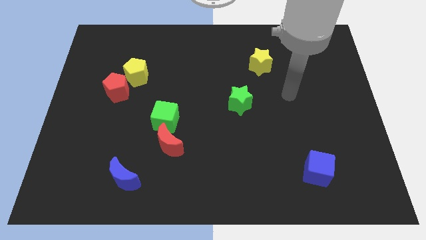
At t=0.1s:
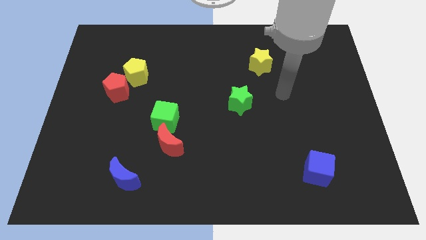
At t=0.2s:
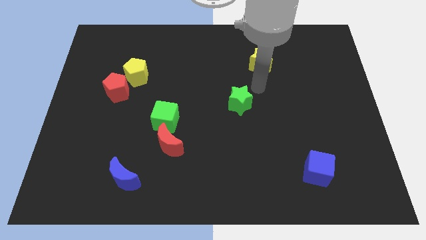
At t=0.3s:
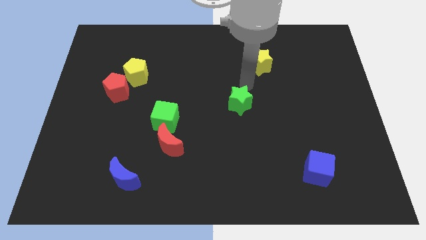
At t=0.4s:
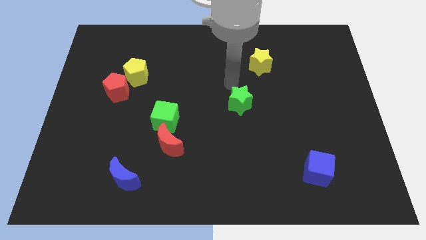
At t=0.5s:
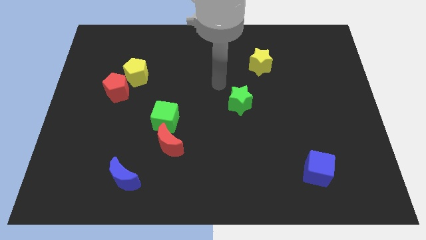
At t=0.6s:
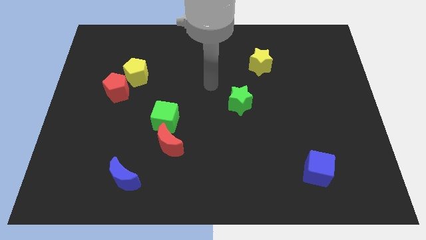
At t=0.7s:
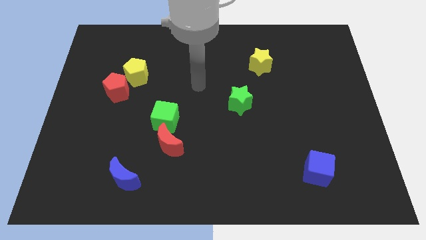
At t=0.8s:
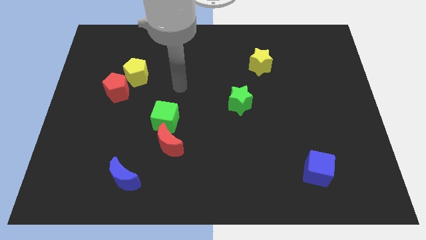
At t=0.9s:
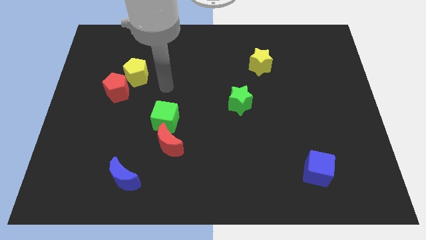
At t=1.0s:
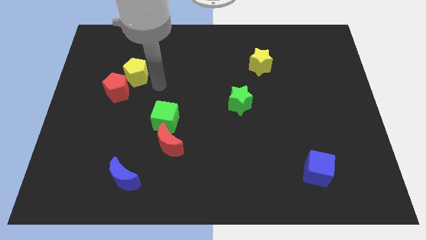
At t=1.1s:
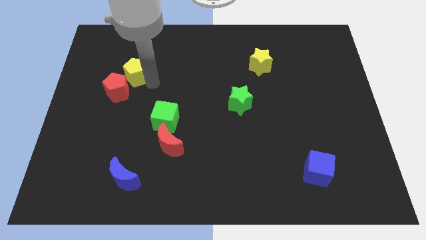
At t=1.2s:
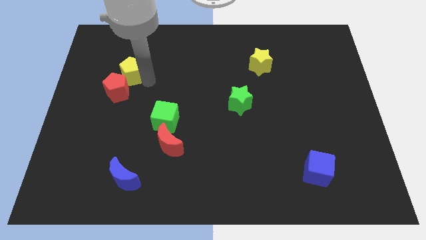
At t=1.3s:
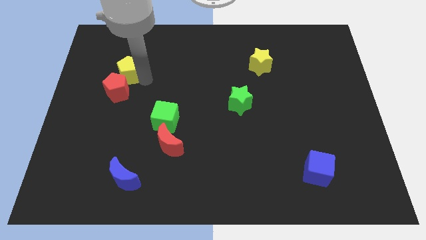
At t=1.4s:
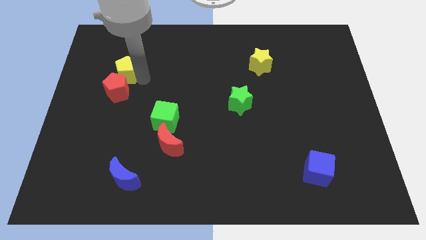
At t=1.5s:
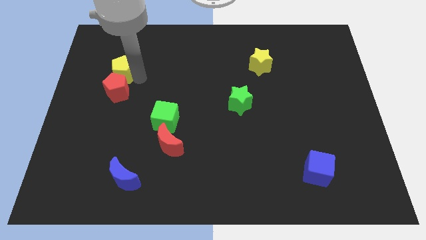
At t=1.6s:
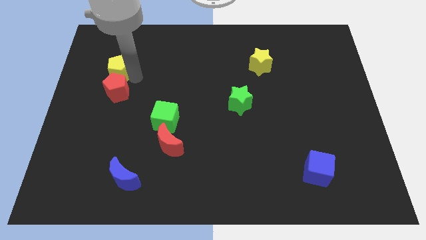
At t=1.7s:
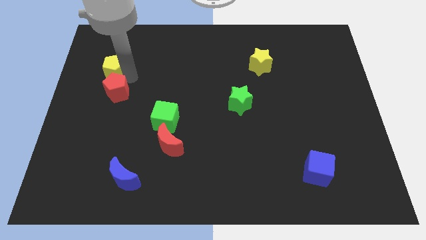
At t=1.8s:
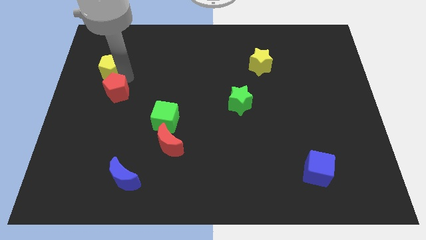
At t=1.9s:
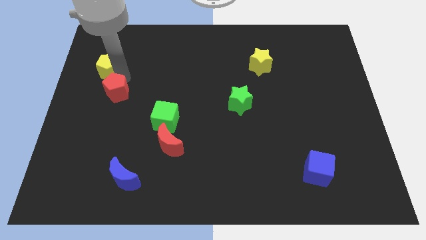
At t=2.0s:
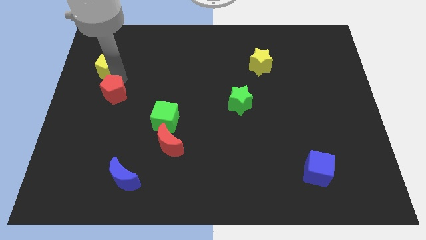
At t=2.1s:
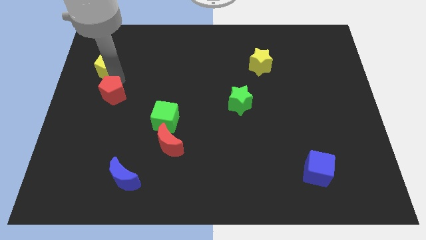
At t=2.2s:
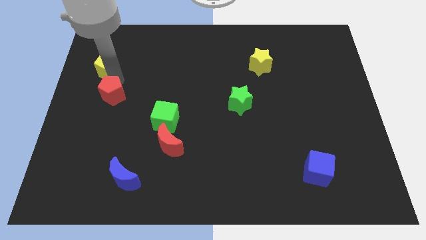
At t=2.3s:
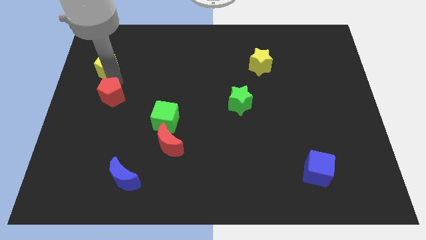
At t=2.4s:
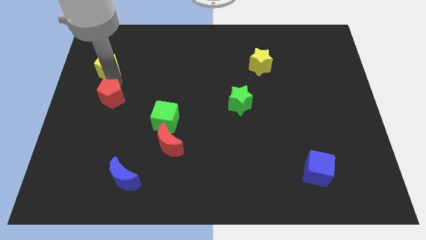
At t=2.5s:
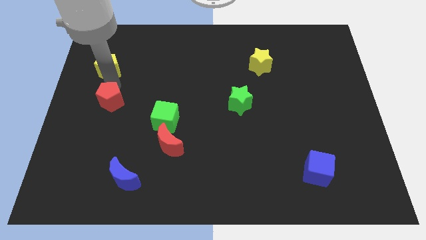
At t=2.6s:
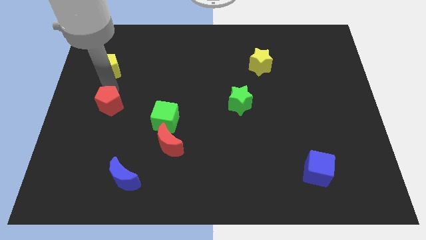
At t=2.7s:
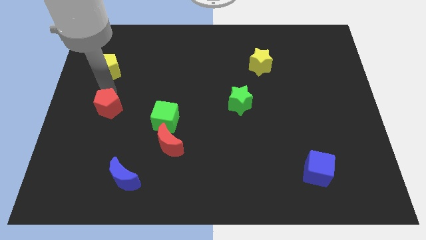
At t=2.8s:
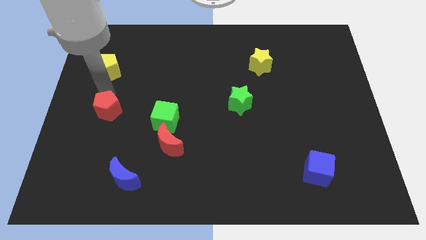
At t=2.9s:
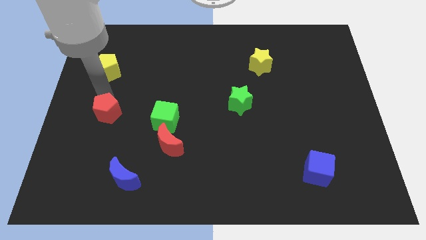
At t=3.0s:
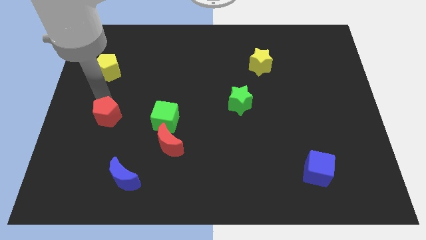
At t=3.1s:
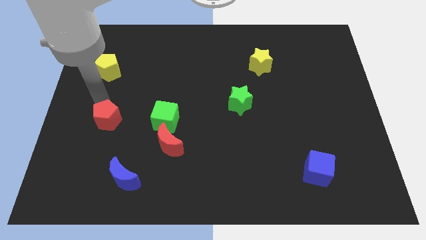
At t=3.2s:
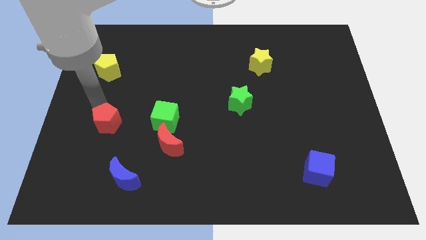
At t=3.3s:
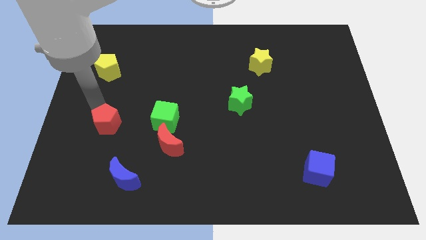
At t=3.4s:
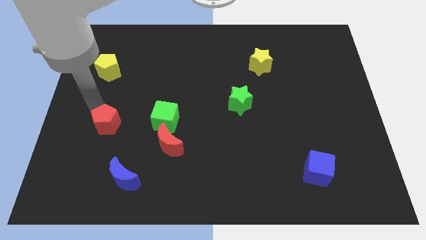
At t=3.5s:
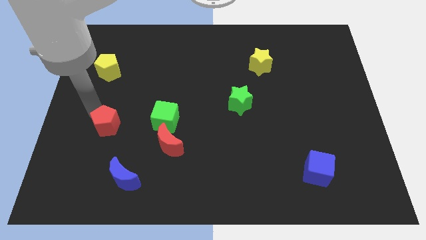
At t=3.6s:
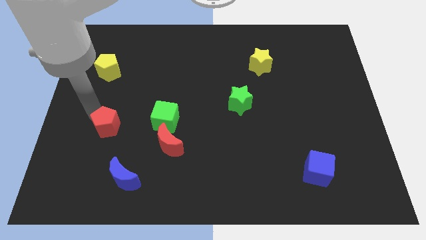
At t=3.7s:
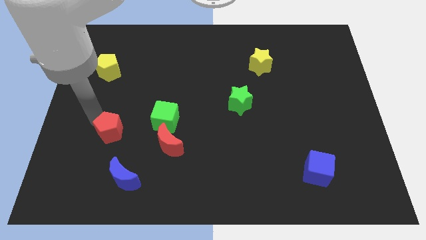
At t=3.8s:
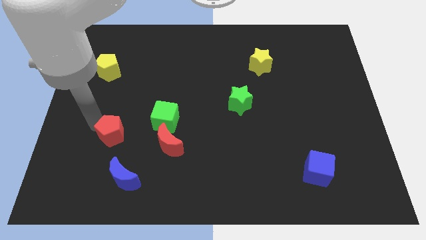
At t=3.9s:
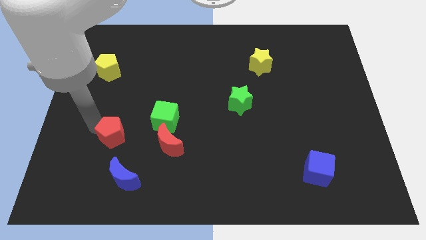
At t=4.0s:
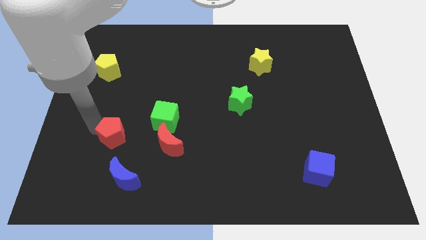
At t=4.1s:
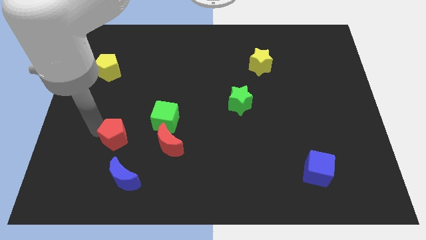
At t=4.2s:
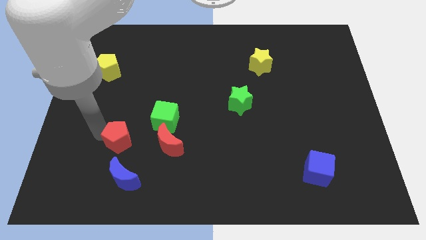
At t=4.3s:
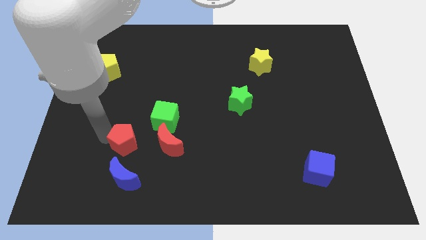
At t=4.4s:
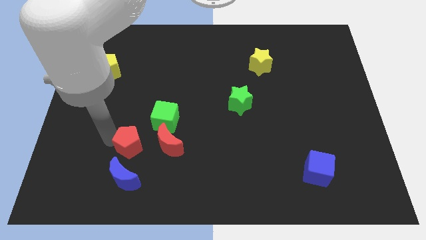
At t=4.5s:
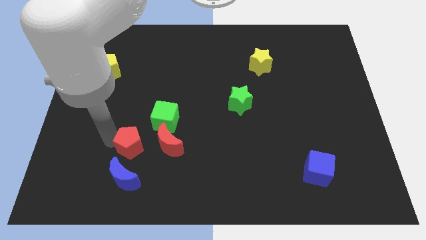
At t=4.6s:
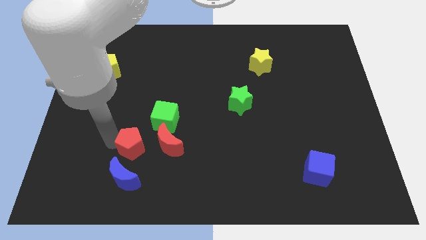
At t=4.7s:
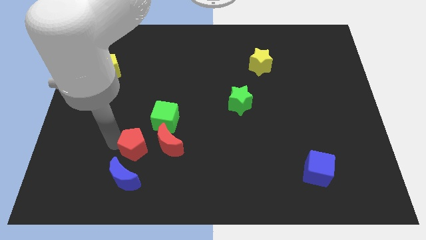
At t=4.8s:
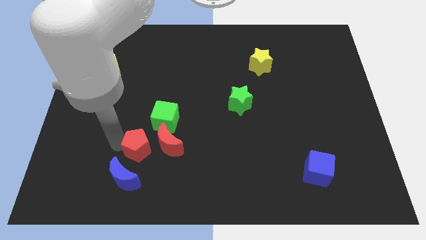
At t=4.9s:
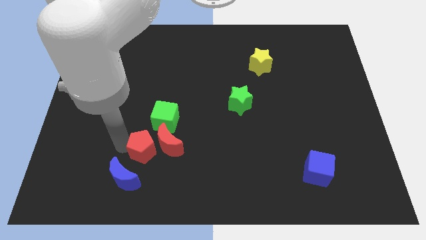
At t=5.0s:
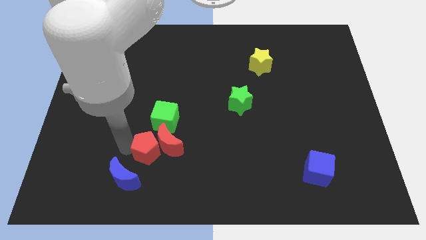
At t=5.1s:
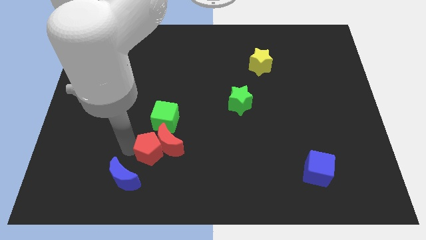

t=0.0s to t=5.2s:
slide the red pentagon towards the red moon

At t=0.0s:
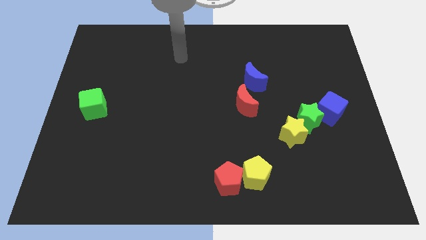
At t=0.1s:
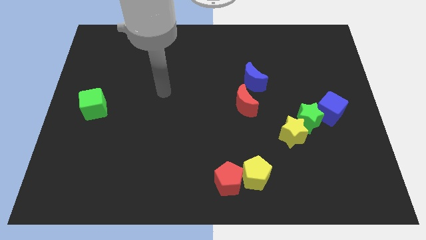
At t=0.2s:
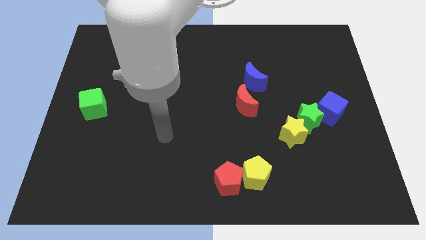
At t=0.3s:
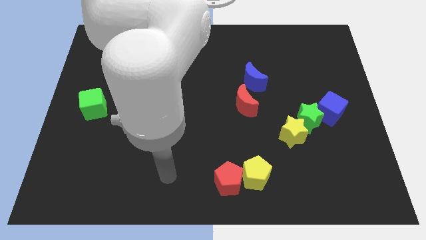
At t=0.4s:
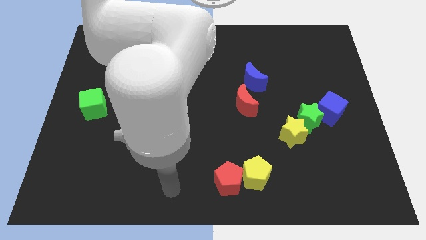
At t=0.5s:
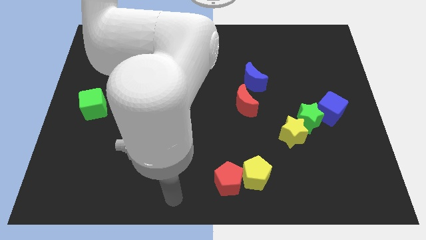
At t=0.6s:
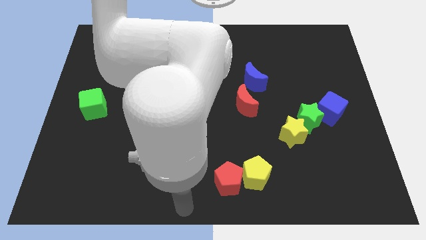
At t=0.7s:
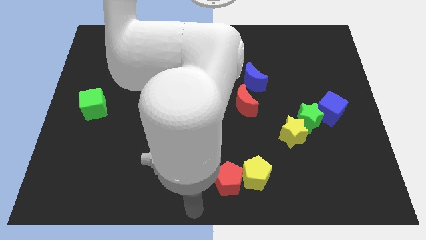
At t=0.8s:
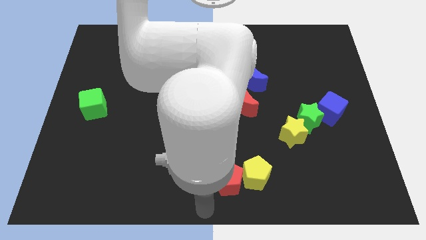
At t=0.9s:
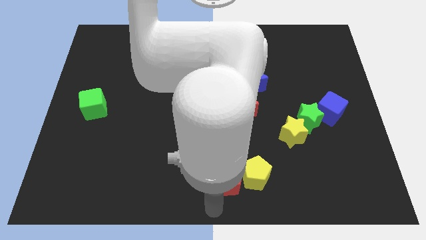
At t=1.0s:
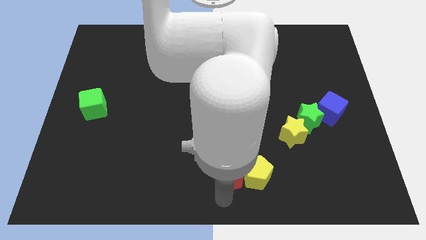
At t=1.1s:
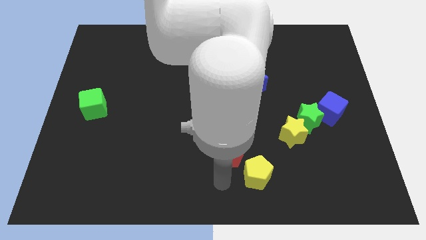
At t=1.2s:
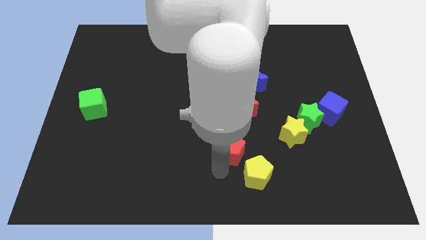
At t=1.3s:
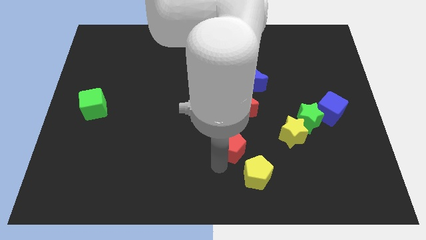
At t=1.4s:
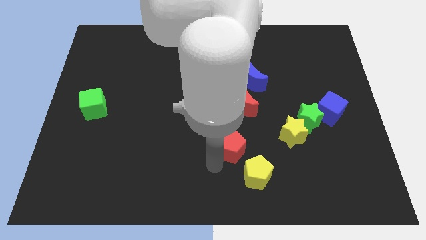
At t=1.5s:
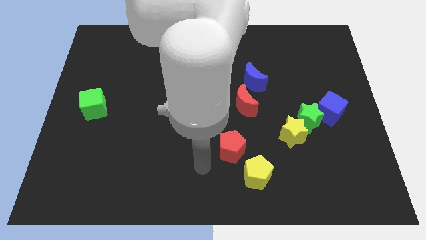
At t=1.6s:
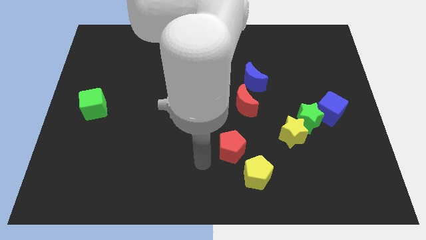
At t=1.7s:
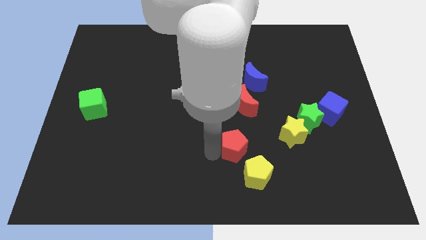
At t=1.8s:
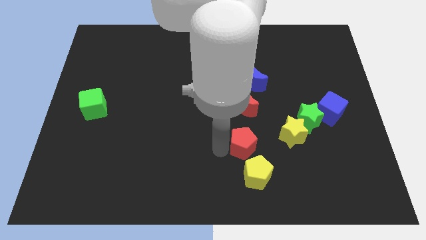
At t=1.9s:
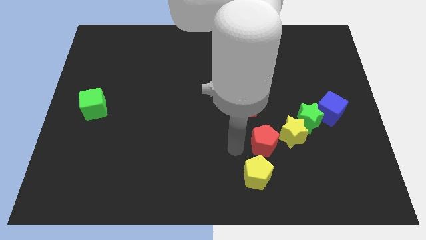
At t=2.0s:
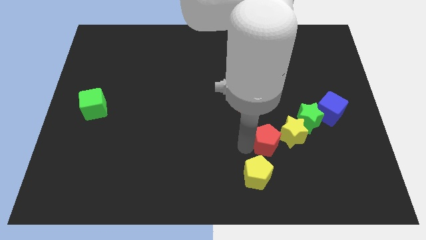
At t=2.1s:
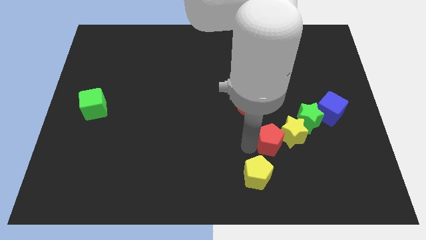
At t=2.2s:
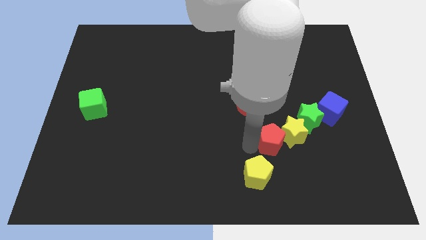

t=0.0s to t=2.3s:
push the red pentagon to the yellow star

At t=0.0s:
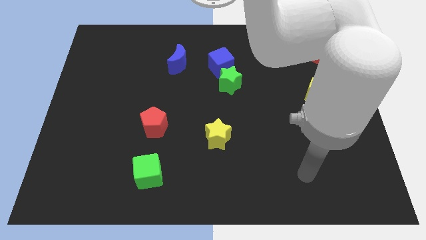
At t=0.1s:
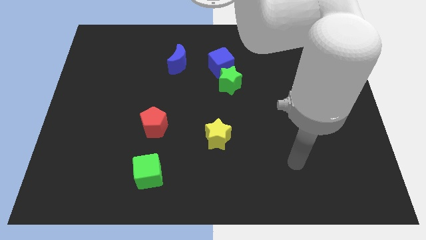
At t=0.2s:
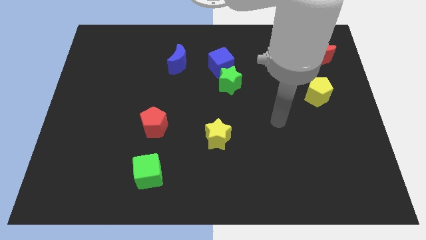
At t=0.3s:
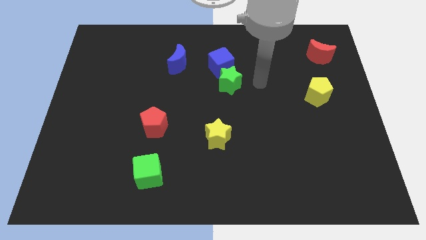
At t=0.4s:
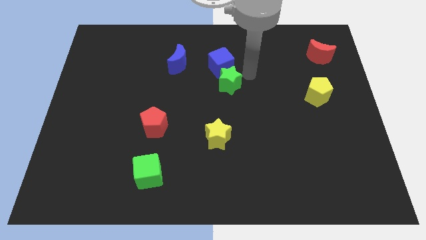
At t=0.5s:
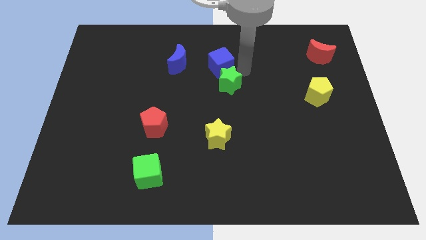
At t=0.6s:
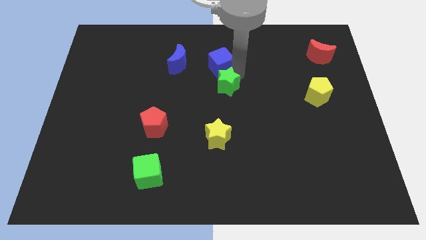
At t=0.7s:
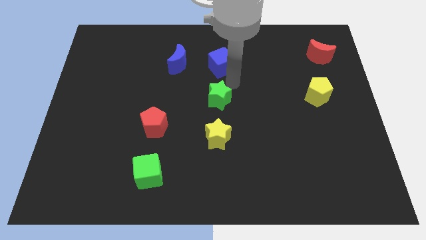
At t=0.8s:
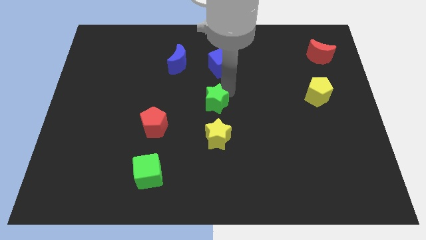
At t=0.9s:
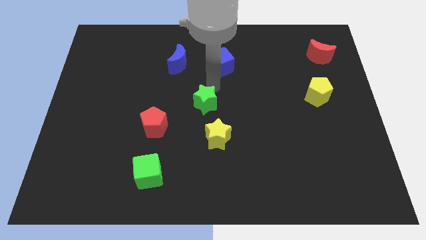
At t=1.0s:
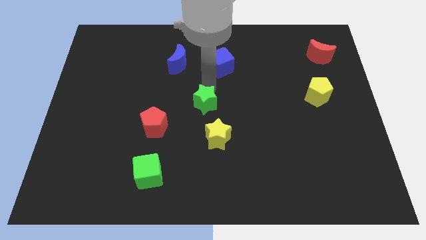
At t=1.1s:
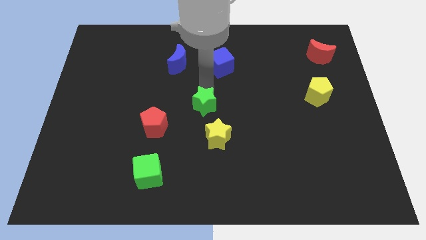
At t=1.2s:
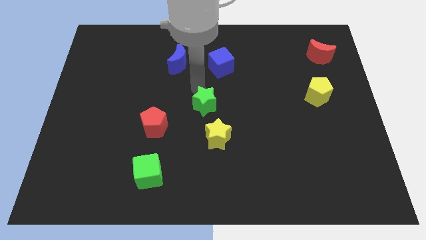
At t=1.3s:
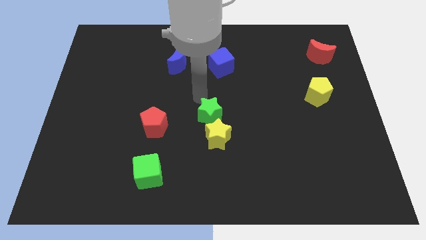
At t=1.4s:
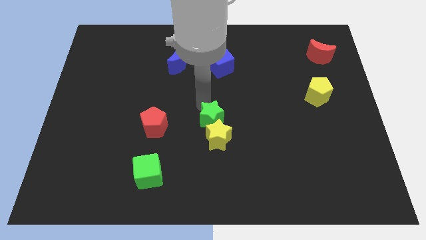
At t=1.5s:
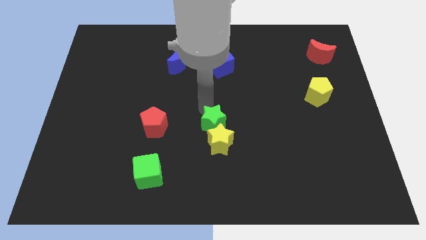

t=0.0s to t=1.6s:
slide the green star to the yellow star
